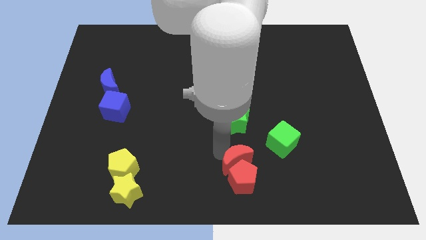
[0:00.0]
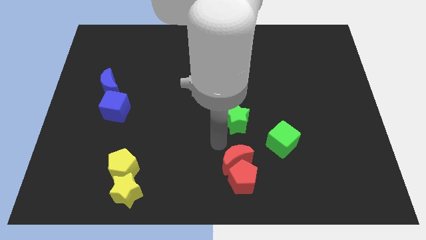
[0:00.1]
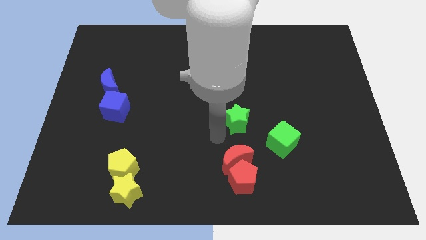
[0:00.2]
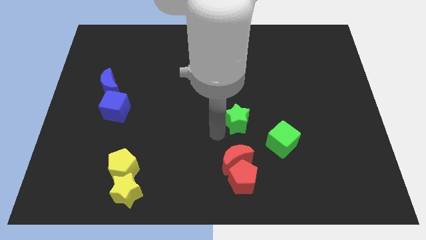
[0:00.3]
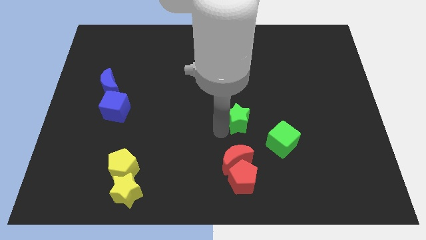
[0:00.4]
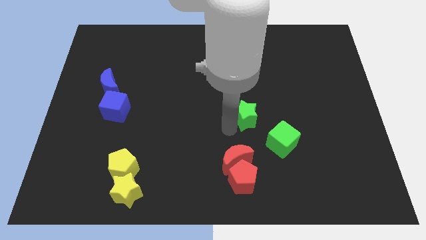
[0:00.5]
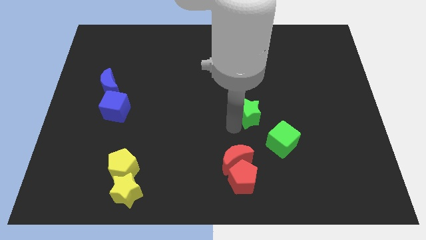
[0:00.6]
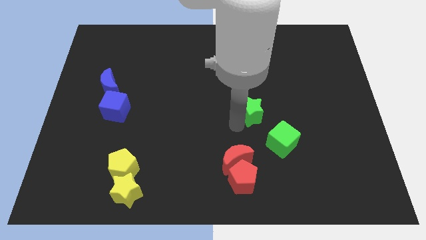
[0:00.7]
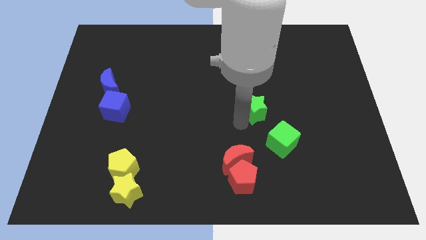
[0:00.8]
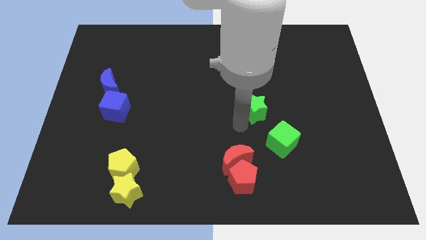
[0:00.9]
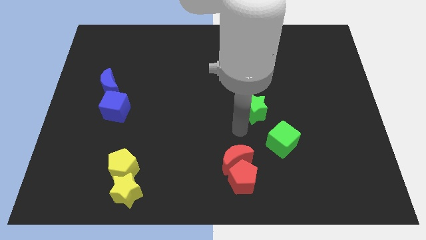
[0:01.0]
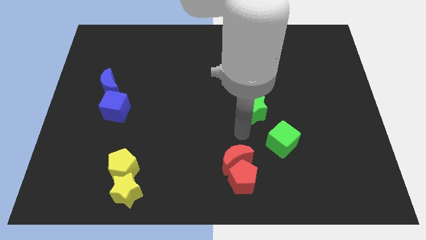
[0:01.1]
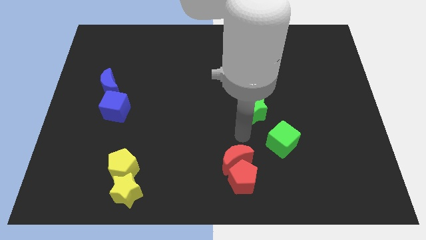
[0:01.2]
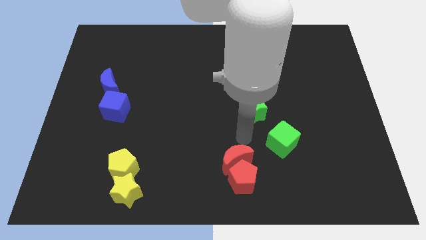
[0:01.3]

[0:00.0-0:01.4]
move the green star slightly

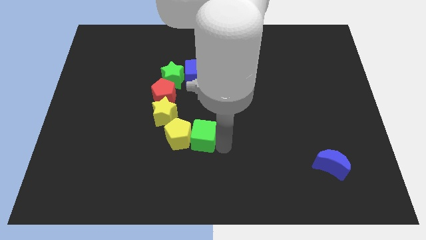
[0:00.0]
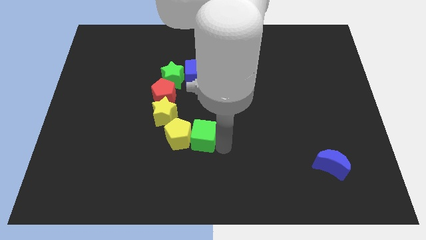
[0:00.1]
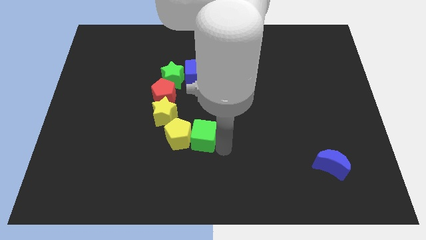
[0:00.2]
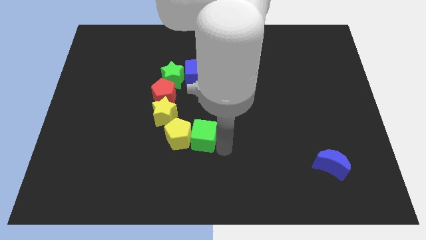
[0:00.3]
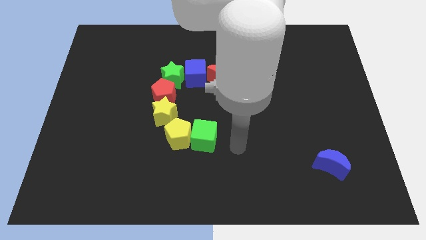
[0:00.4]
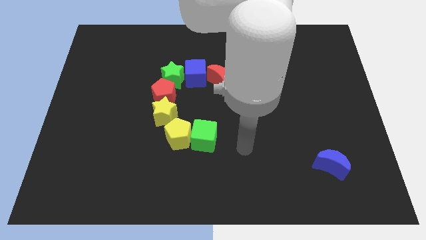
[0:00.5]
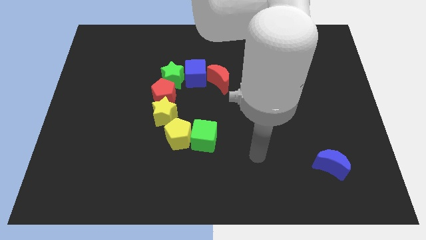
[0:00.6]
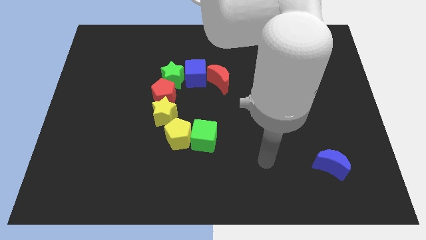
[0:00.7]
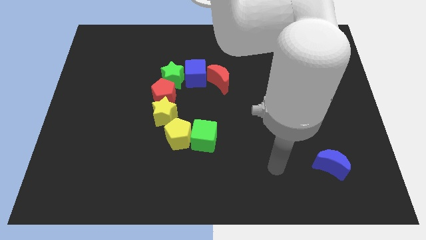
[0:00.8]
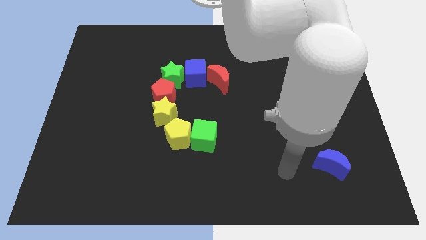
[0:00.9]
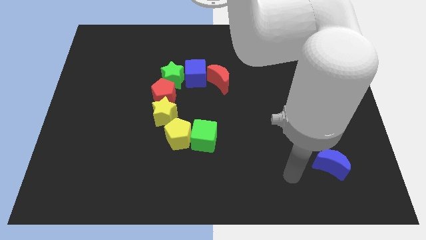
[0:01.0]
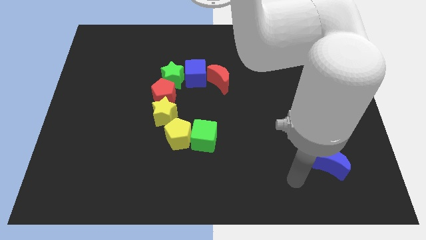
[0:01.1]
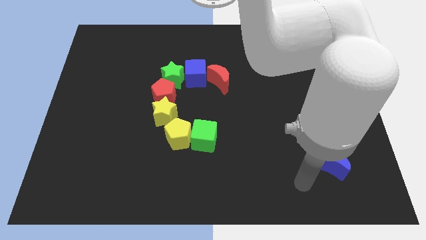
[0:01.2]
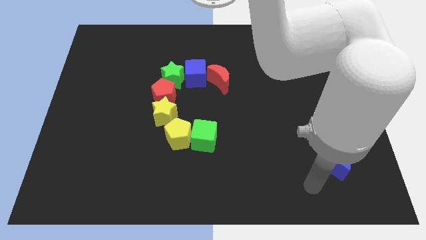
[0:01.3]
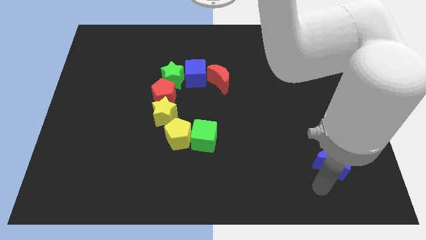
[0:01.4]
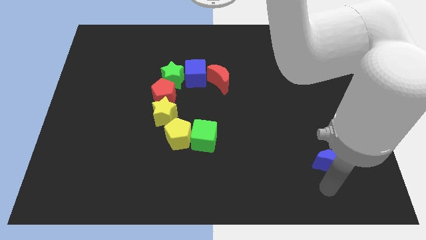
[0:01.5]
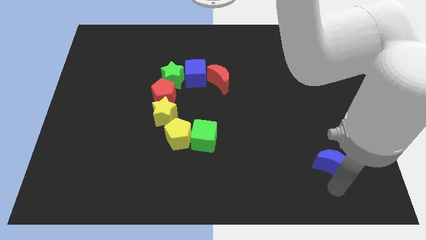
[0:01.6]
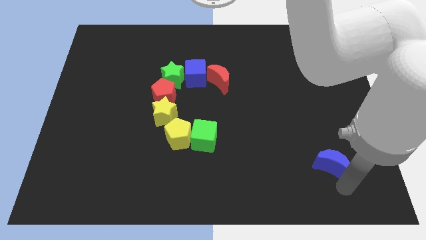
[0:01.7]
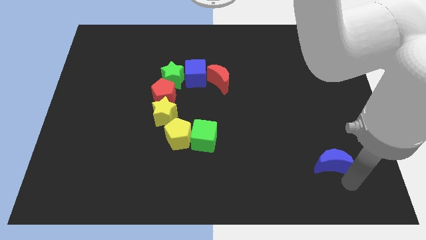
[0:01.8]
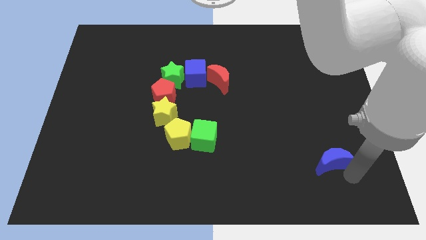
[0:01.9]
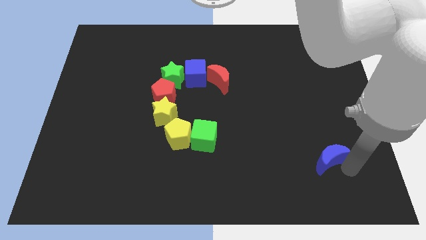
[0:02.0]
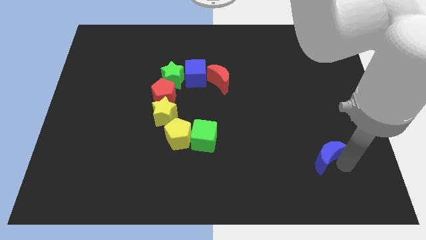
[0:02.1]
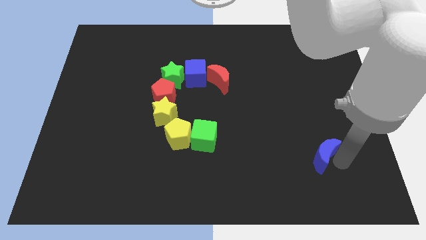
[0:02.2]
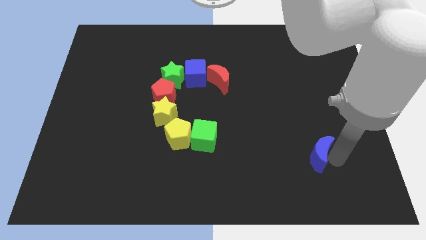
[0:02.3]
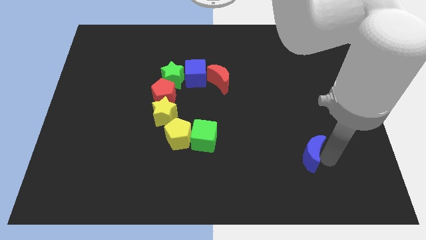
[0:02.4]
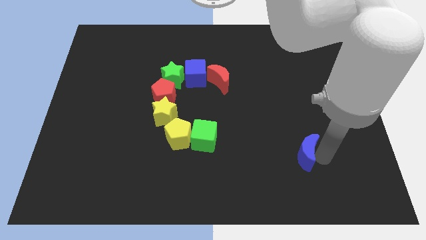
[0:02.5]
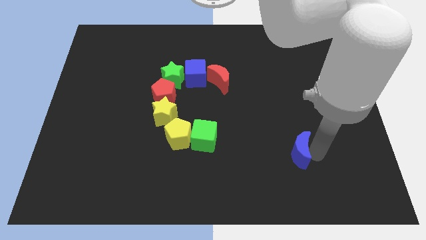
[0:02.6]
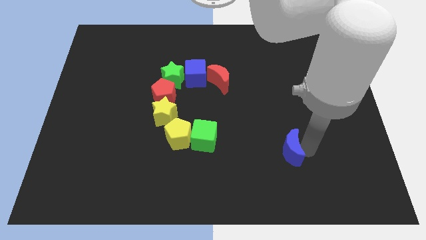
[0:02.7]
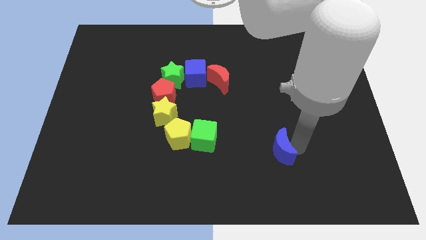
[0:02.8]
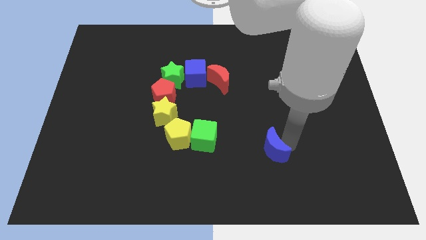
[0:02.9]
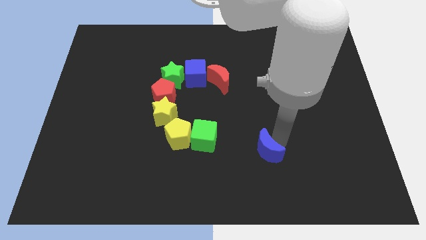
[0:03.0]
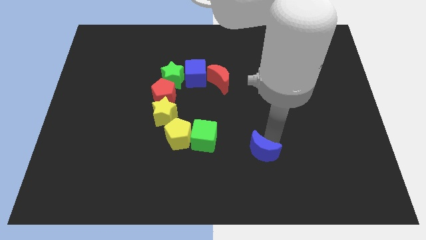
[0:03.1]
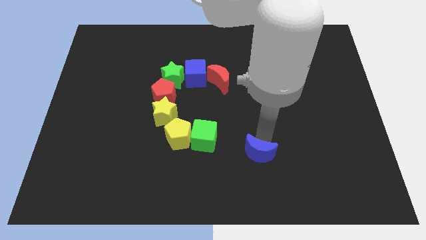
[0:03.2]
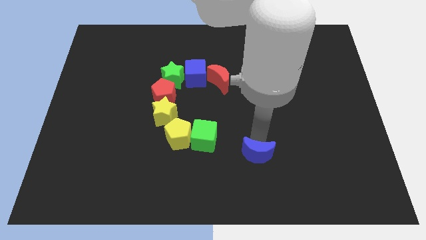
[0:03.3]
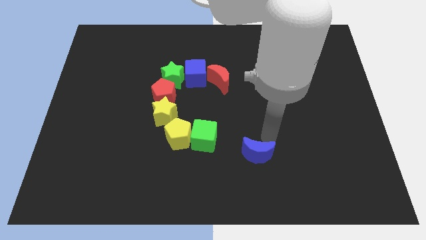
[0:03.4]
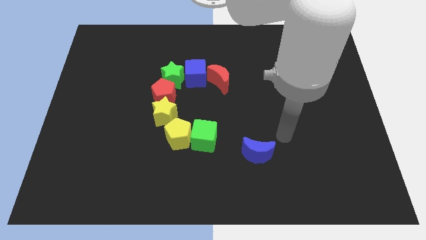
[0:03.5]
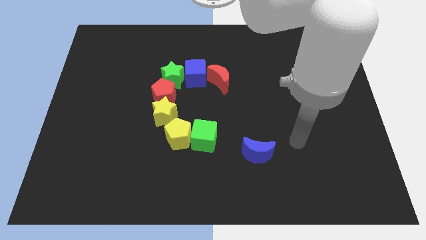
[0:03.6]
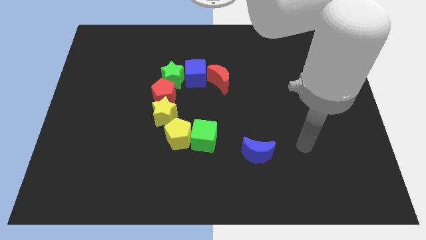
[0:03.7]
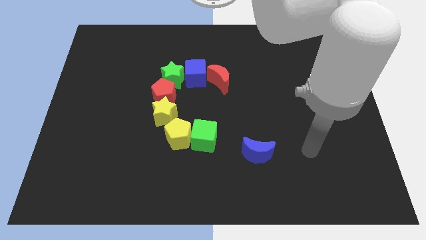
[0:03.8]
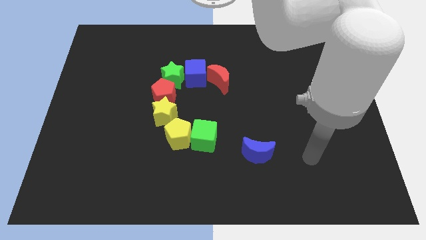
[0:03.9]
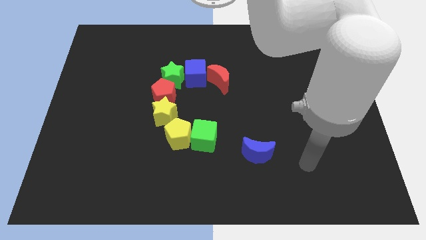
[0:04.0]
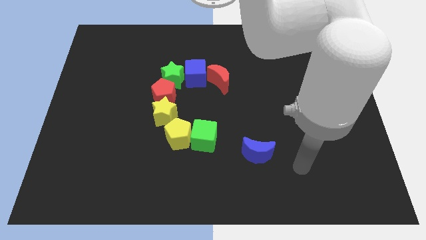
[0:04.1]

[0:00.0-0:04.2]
place the blue moon bottom right to the red moon

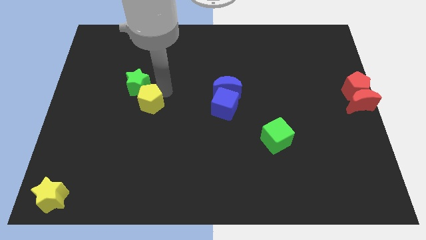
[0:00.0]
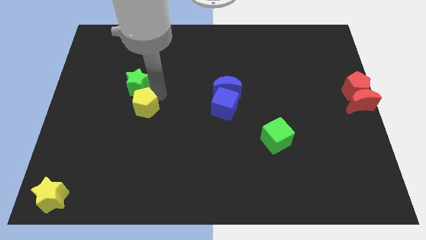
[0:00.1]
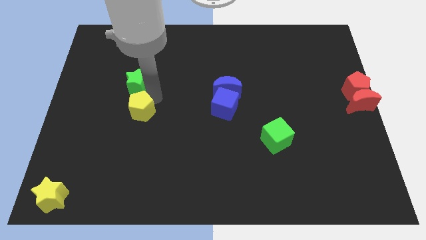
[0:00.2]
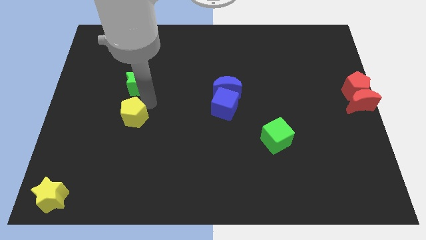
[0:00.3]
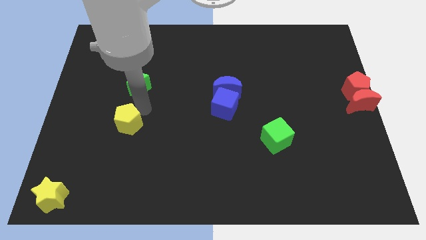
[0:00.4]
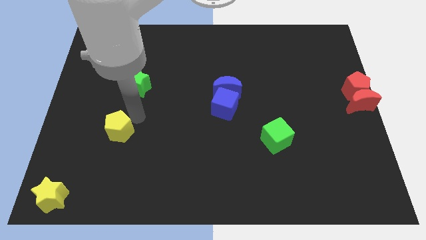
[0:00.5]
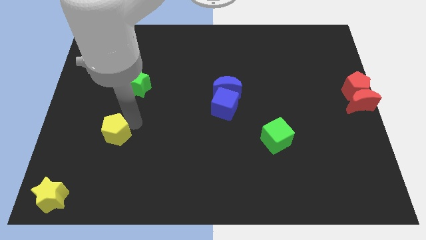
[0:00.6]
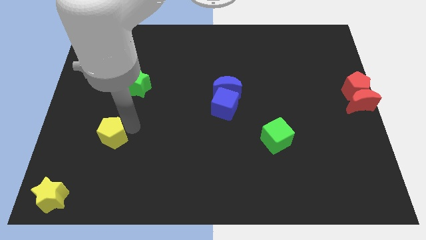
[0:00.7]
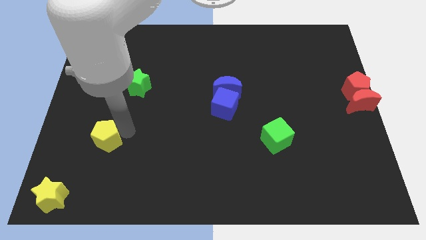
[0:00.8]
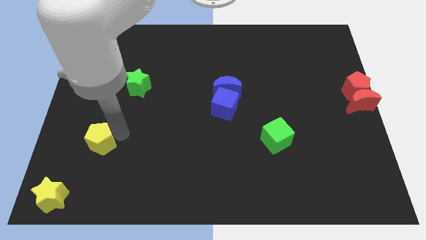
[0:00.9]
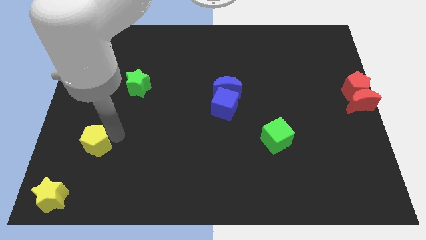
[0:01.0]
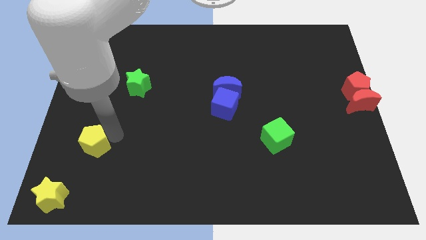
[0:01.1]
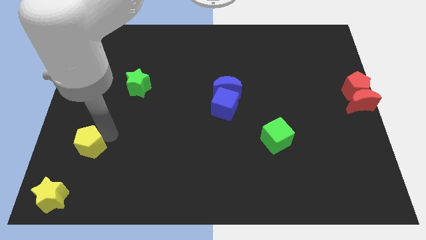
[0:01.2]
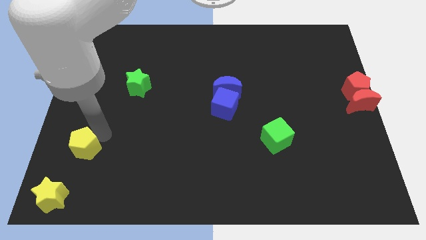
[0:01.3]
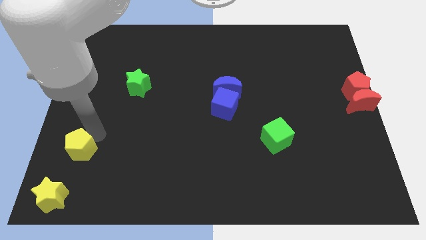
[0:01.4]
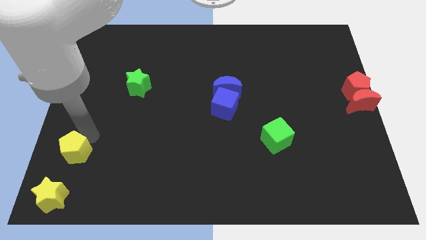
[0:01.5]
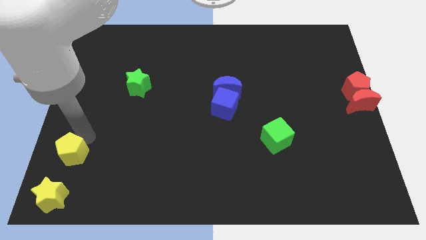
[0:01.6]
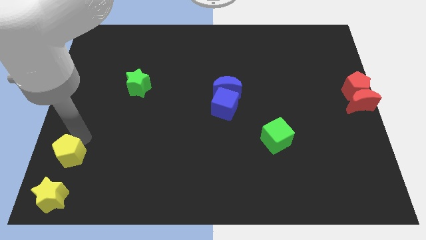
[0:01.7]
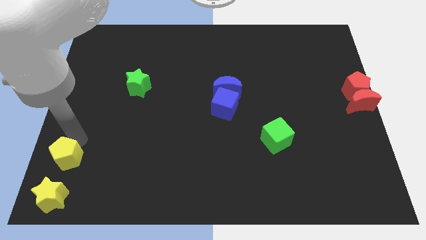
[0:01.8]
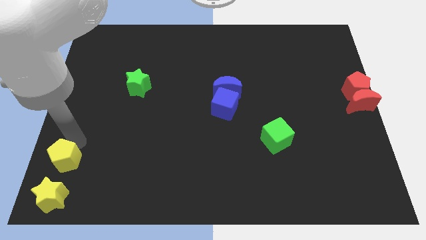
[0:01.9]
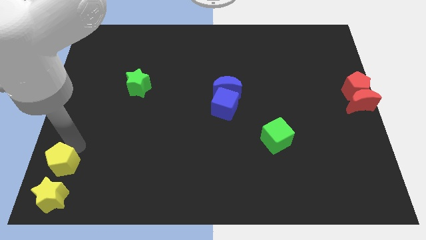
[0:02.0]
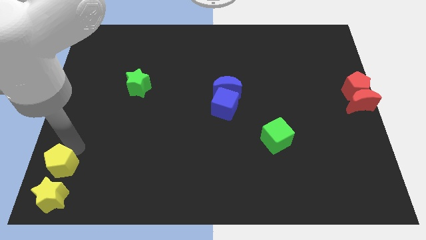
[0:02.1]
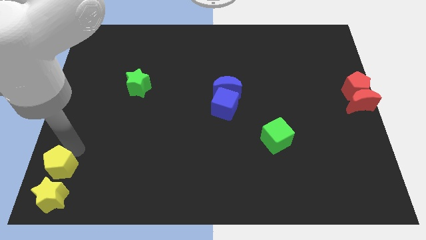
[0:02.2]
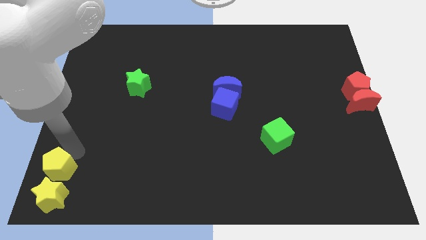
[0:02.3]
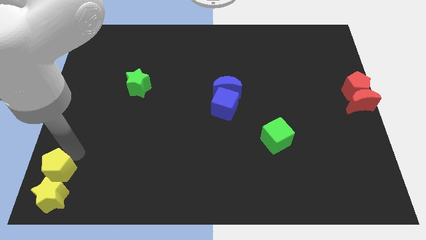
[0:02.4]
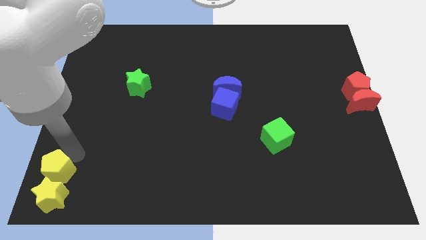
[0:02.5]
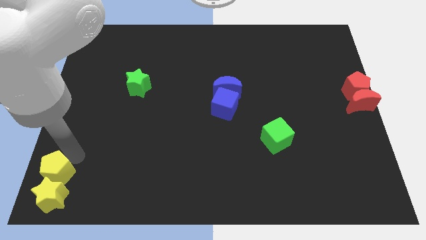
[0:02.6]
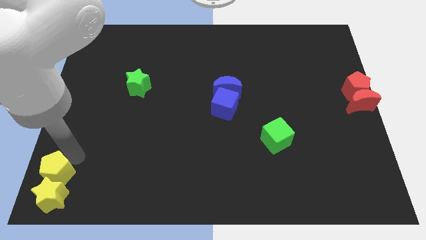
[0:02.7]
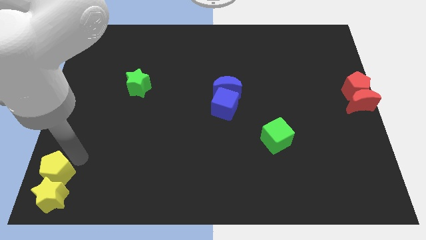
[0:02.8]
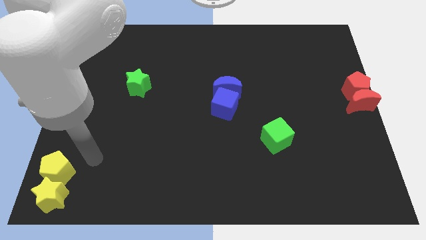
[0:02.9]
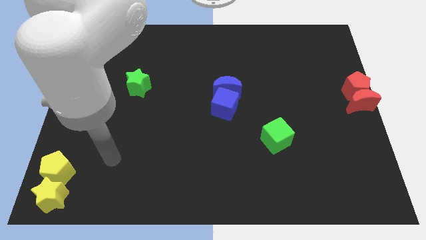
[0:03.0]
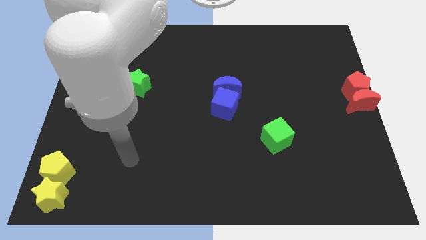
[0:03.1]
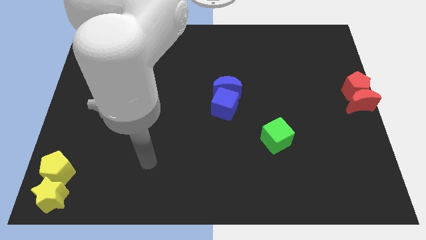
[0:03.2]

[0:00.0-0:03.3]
place the yellow pentagon at the top of yellow star
